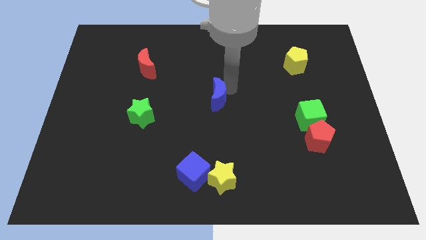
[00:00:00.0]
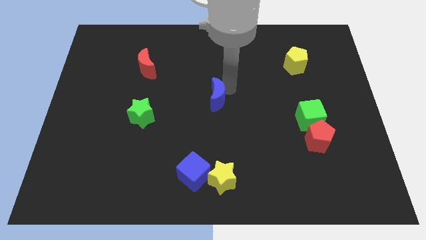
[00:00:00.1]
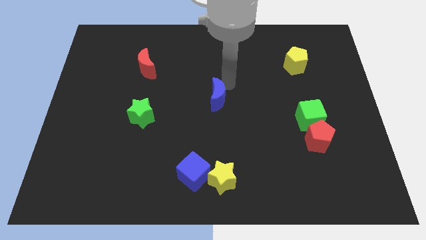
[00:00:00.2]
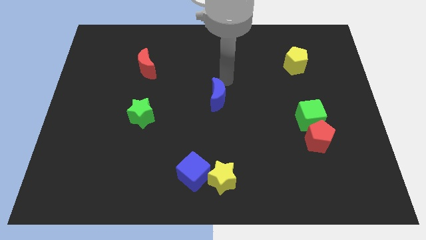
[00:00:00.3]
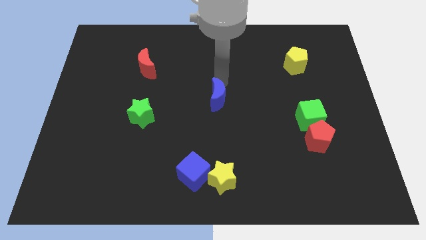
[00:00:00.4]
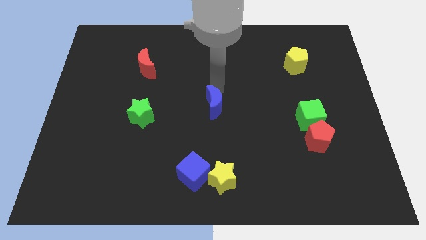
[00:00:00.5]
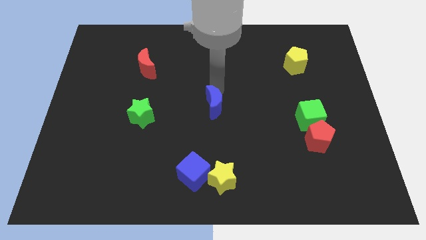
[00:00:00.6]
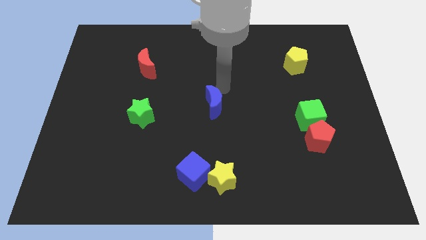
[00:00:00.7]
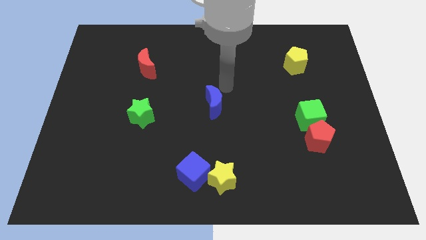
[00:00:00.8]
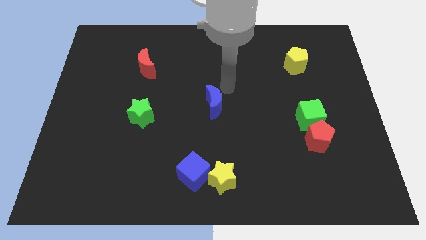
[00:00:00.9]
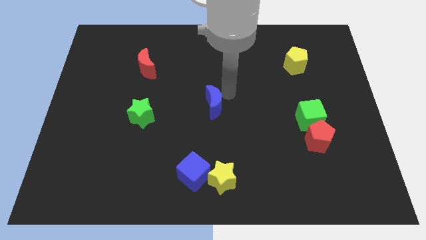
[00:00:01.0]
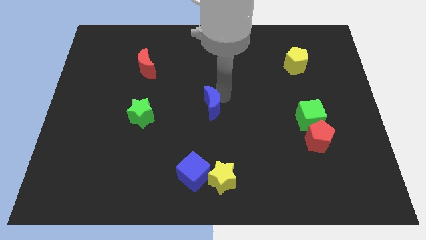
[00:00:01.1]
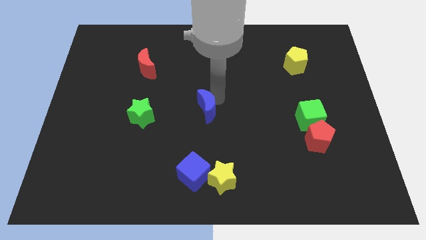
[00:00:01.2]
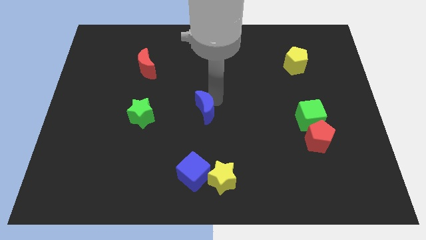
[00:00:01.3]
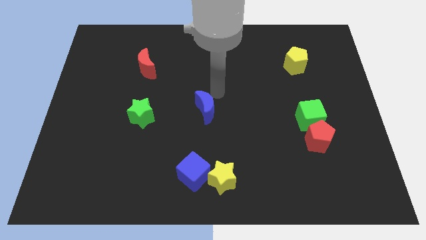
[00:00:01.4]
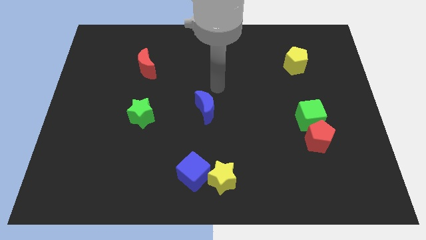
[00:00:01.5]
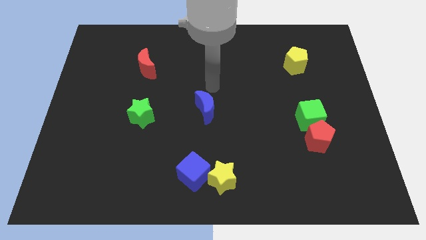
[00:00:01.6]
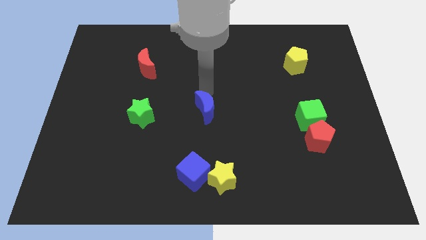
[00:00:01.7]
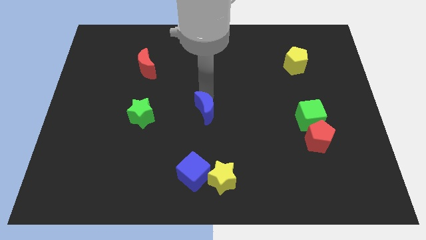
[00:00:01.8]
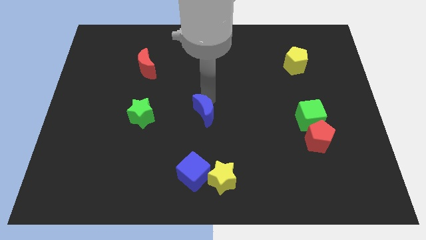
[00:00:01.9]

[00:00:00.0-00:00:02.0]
put the blue moon above the blue cube

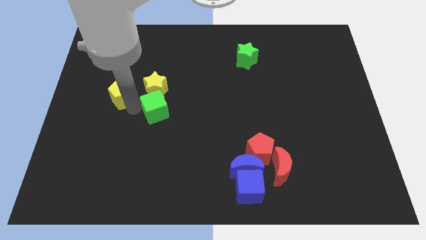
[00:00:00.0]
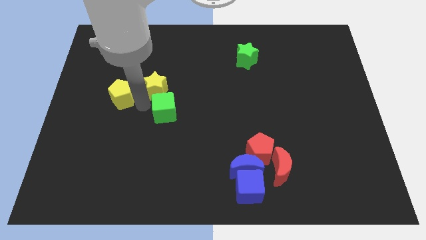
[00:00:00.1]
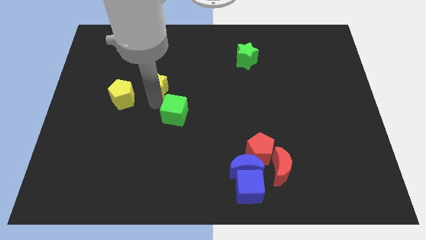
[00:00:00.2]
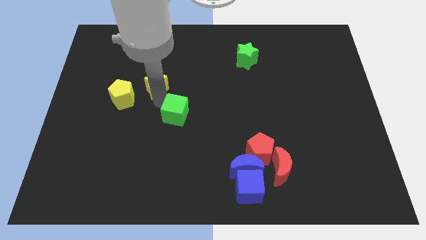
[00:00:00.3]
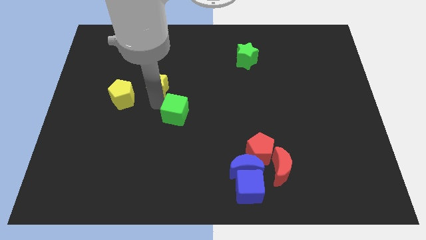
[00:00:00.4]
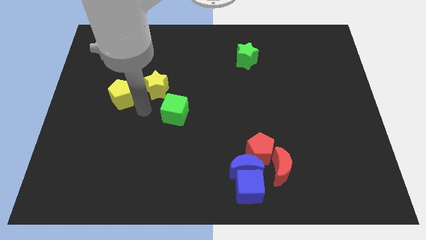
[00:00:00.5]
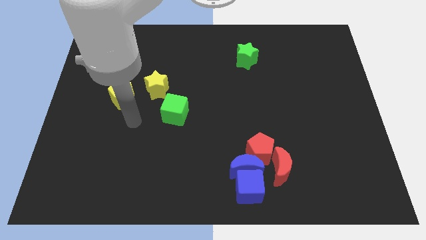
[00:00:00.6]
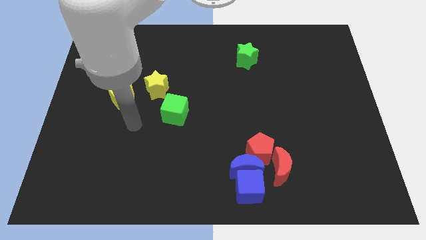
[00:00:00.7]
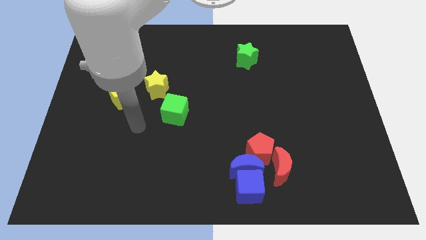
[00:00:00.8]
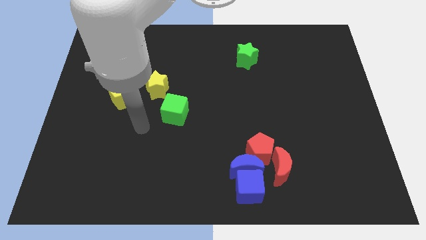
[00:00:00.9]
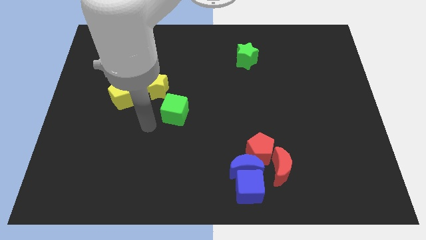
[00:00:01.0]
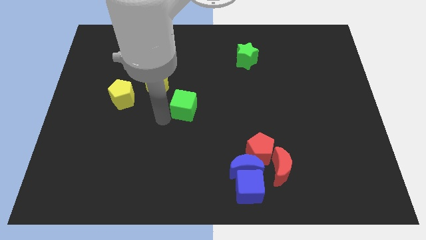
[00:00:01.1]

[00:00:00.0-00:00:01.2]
separate the green cube from the yellow star

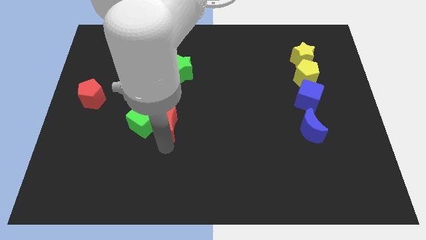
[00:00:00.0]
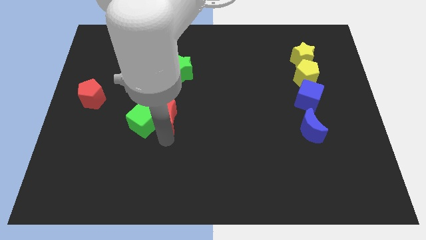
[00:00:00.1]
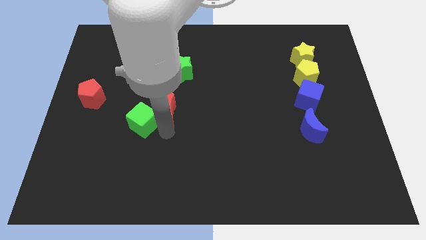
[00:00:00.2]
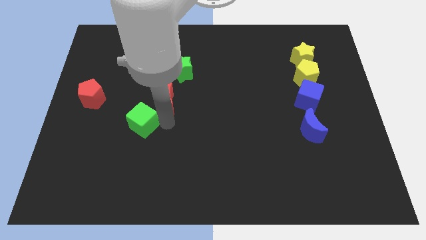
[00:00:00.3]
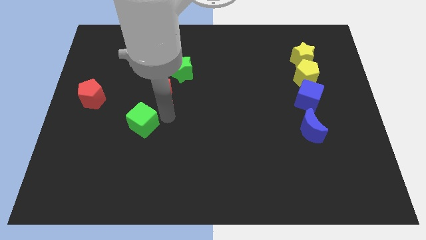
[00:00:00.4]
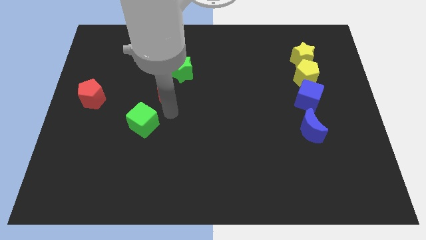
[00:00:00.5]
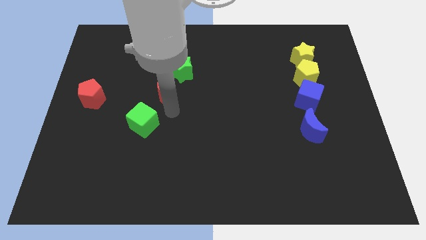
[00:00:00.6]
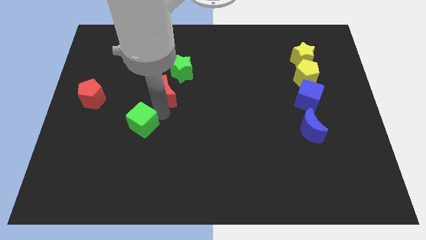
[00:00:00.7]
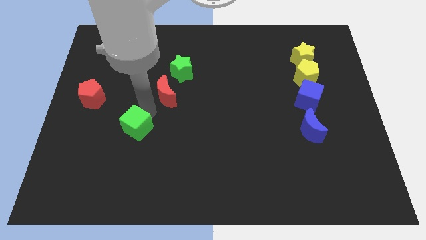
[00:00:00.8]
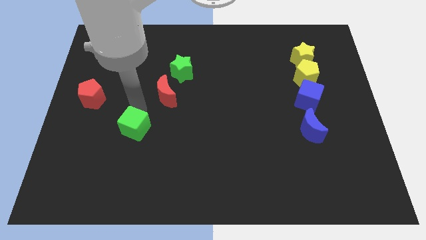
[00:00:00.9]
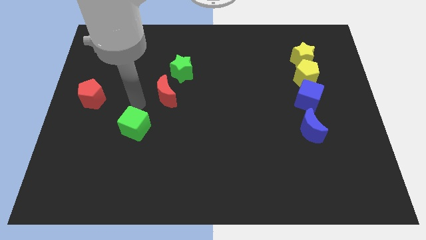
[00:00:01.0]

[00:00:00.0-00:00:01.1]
place red moon in between two green blocks

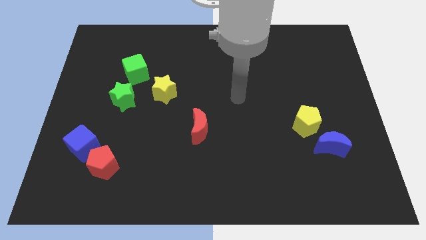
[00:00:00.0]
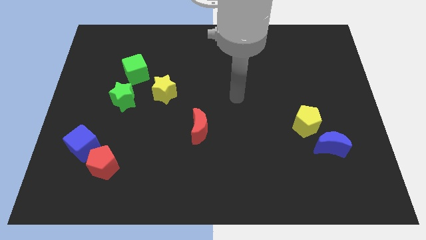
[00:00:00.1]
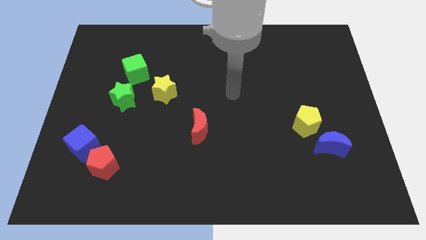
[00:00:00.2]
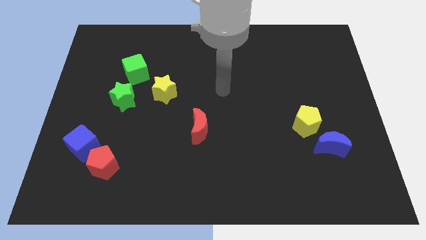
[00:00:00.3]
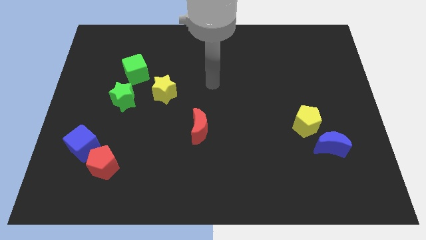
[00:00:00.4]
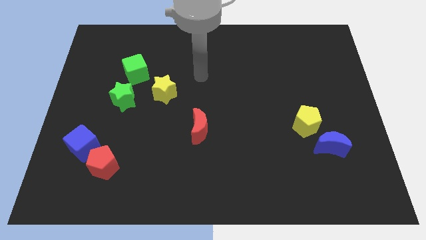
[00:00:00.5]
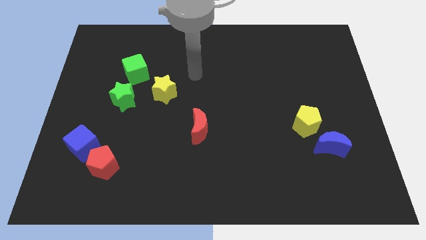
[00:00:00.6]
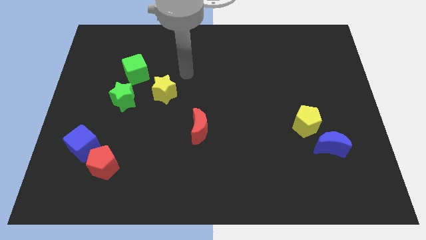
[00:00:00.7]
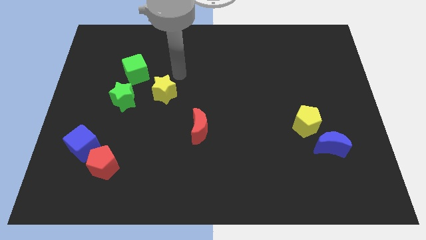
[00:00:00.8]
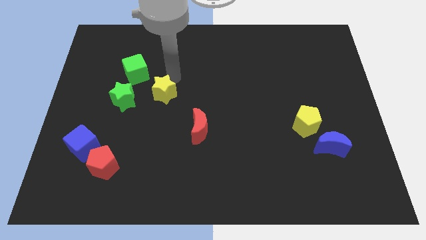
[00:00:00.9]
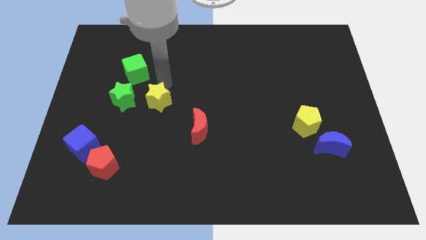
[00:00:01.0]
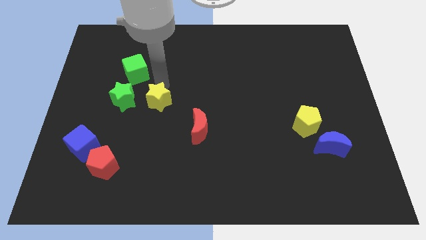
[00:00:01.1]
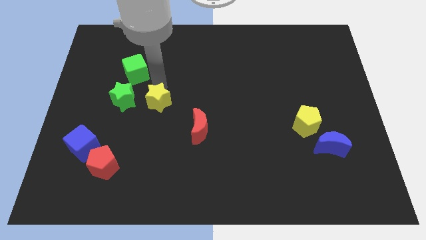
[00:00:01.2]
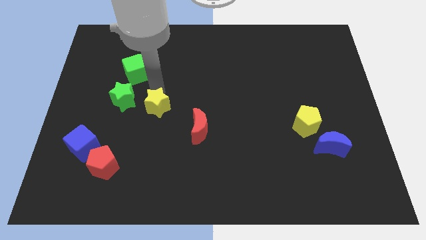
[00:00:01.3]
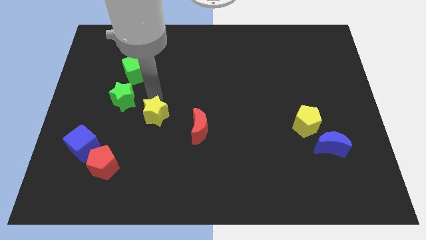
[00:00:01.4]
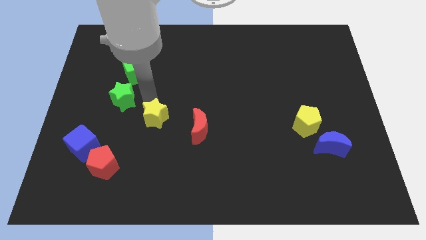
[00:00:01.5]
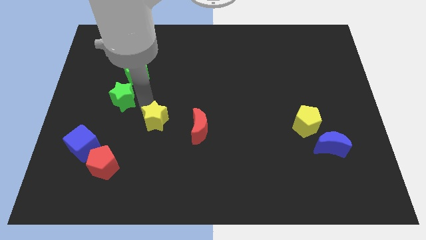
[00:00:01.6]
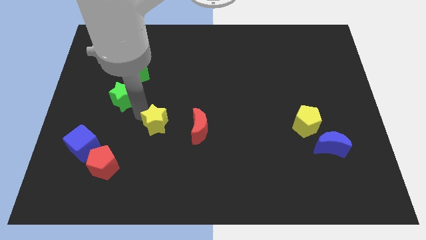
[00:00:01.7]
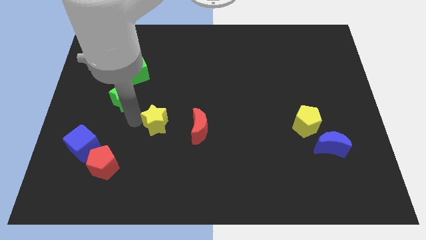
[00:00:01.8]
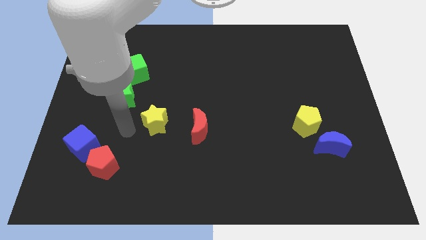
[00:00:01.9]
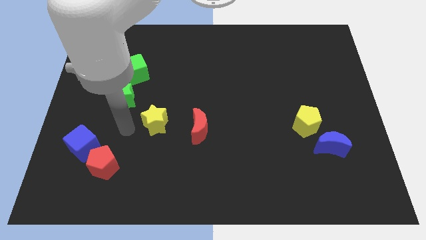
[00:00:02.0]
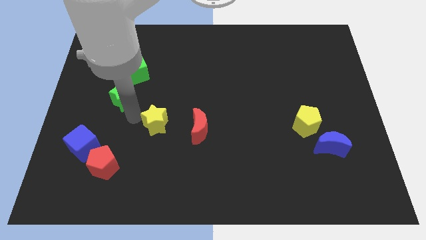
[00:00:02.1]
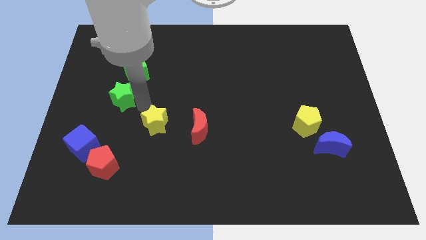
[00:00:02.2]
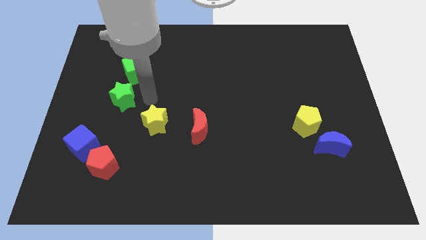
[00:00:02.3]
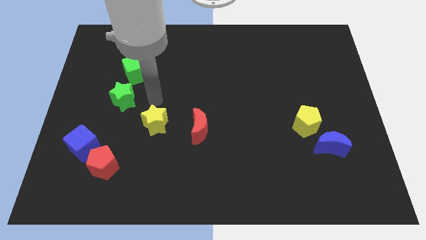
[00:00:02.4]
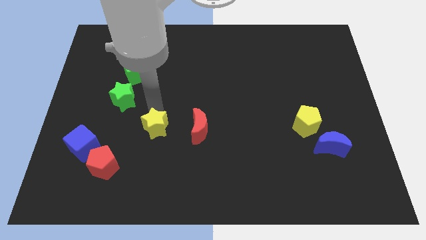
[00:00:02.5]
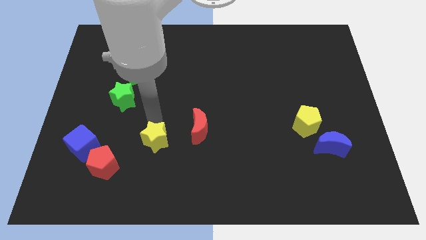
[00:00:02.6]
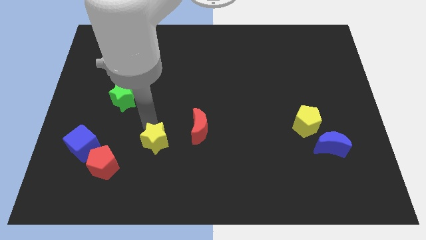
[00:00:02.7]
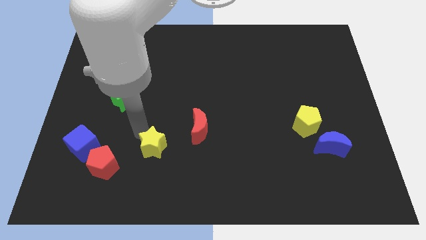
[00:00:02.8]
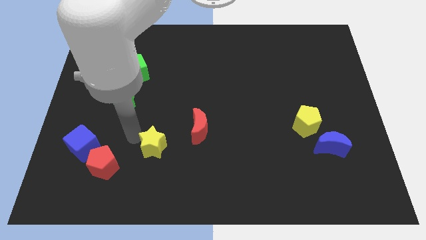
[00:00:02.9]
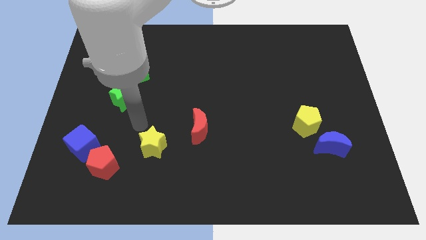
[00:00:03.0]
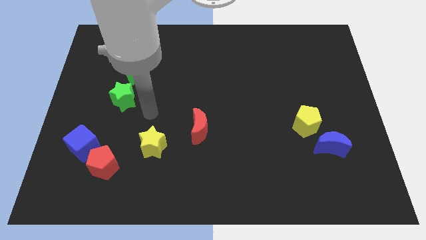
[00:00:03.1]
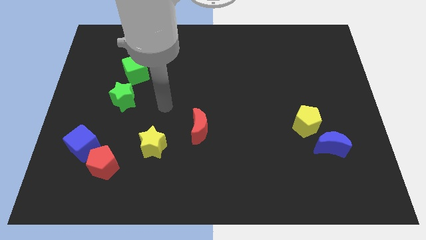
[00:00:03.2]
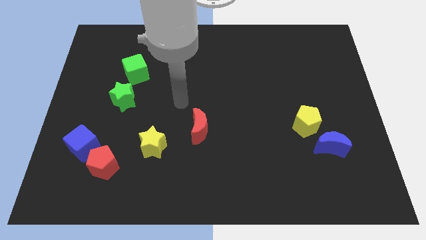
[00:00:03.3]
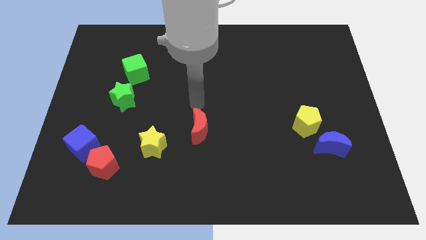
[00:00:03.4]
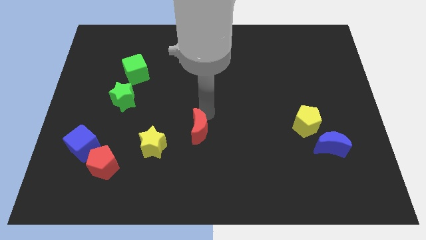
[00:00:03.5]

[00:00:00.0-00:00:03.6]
place the yellow star in between red pentagon and red crescent

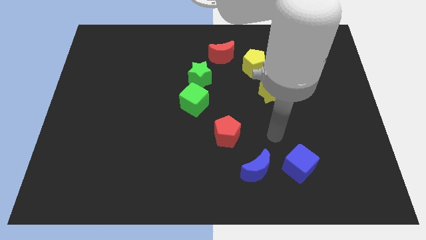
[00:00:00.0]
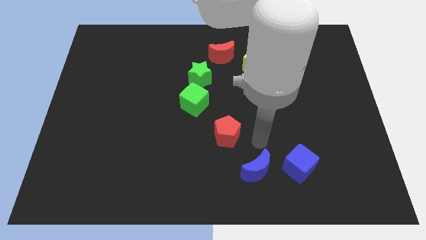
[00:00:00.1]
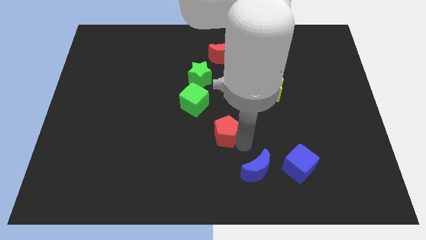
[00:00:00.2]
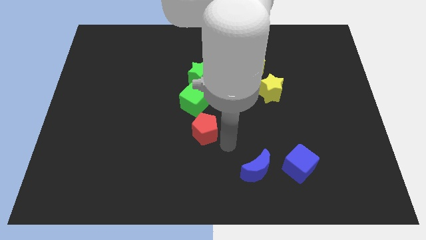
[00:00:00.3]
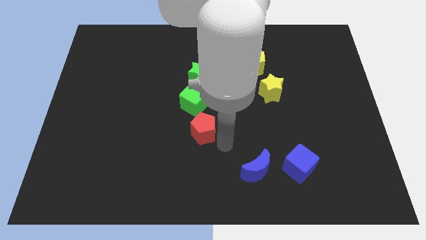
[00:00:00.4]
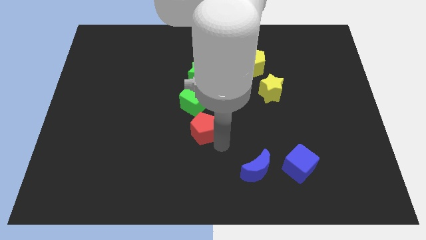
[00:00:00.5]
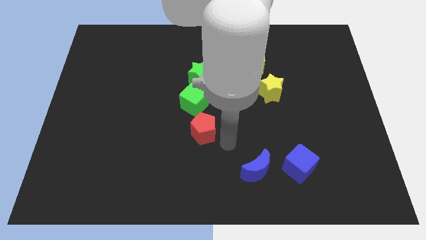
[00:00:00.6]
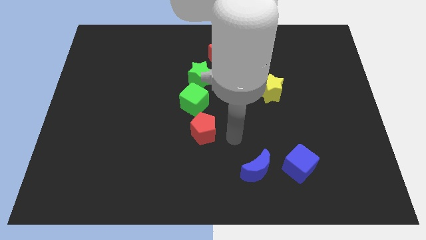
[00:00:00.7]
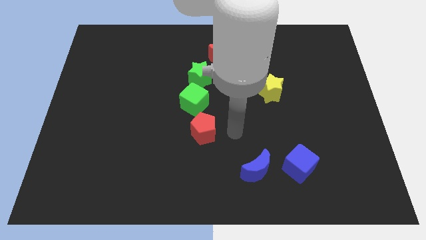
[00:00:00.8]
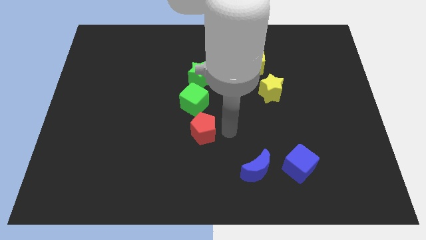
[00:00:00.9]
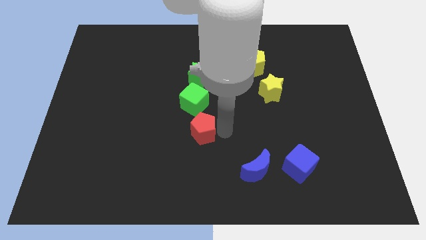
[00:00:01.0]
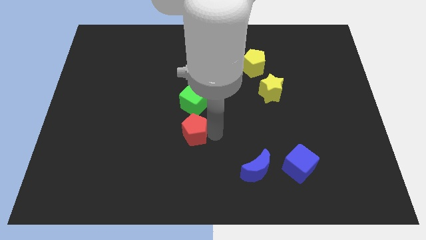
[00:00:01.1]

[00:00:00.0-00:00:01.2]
put the red pentagon to the bottom side of the green cube
